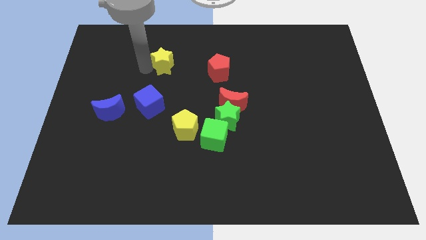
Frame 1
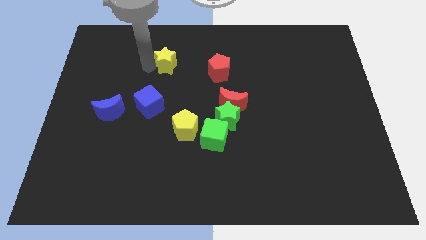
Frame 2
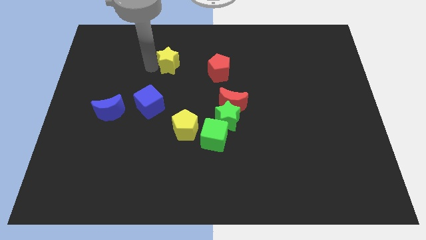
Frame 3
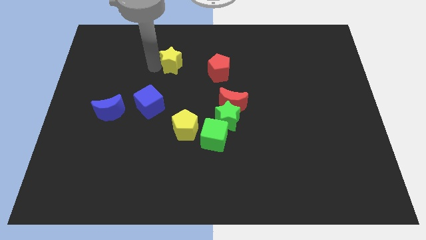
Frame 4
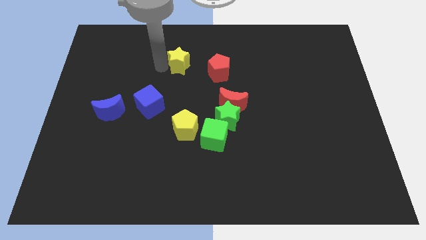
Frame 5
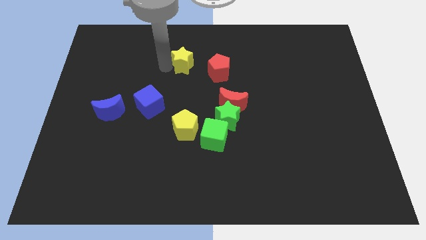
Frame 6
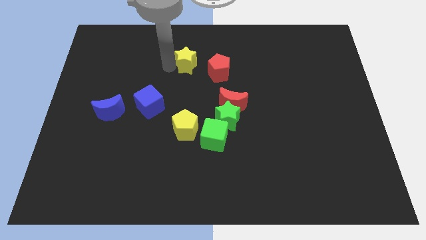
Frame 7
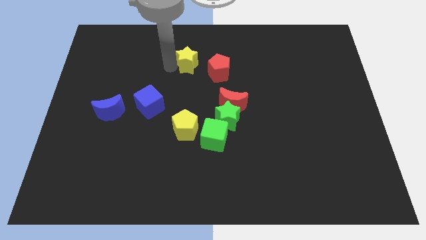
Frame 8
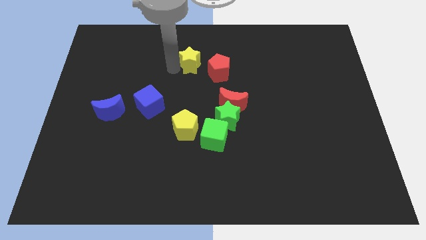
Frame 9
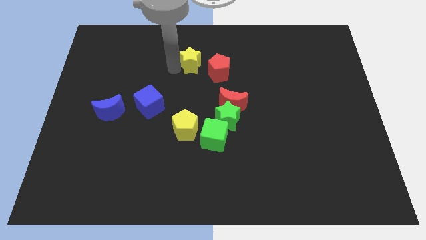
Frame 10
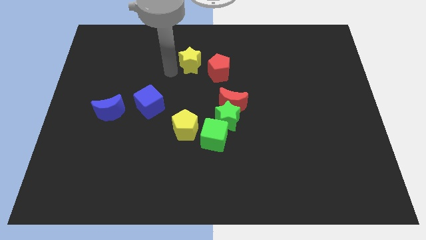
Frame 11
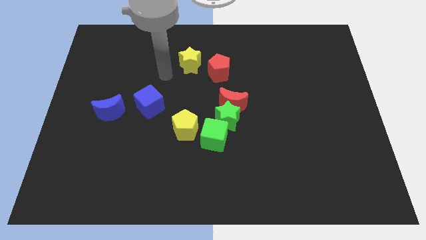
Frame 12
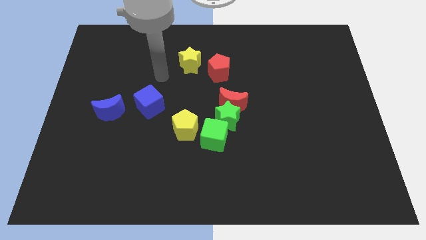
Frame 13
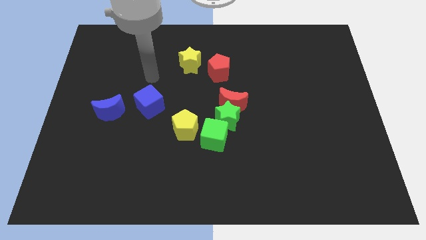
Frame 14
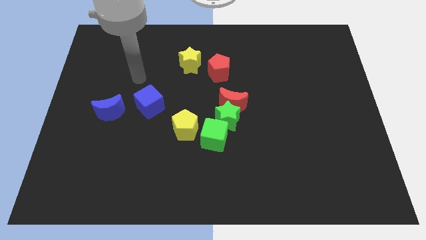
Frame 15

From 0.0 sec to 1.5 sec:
drag yellow star beside red pentagon

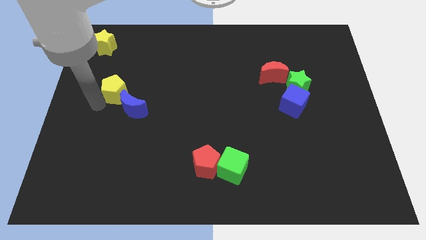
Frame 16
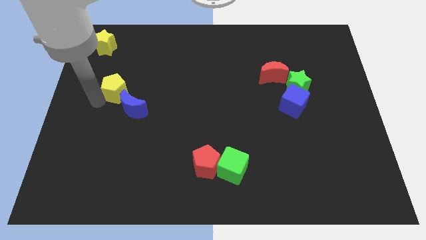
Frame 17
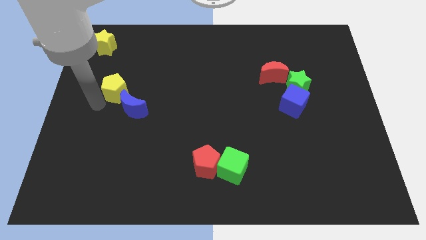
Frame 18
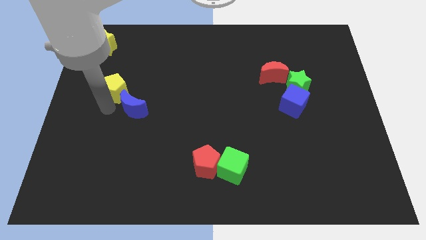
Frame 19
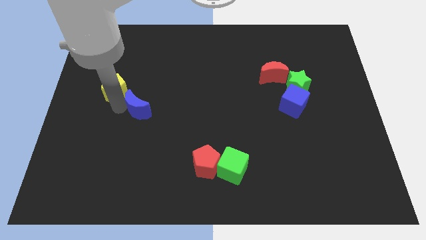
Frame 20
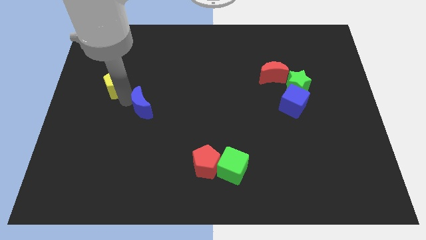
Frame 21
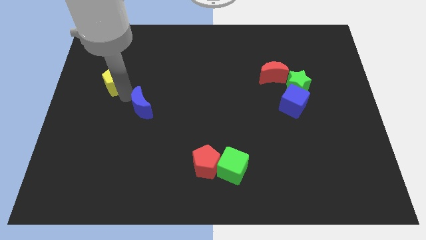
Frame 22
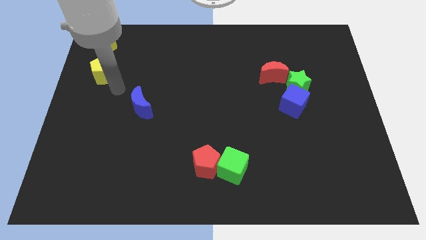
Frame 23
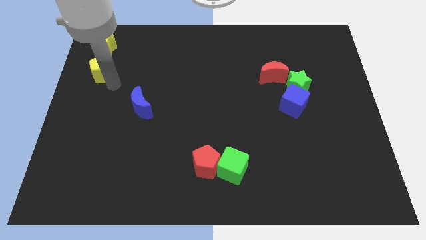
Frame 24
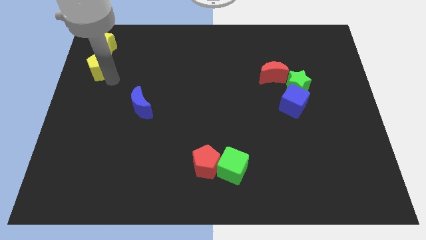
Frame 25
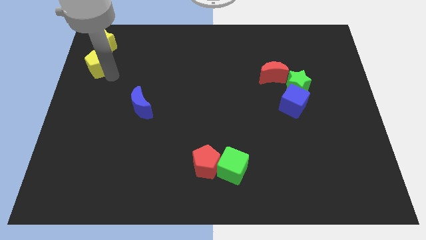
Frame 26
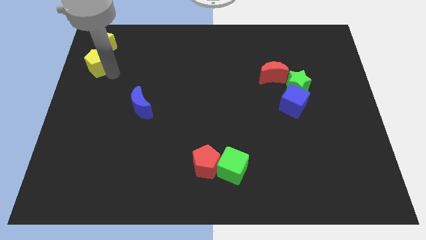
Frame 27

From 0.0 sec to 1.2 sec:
separate the yellow pentagon from blue moon

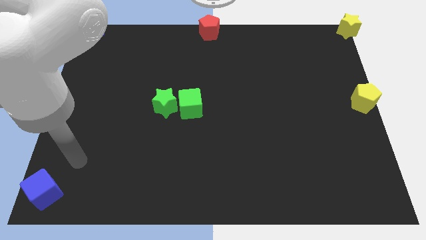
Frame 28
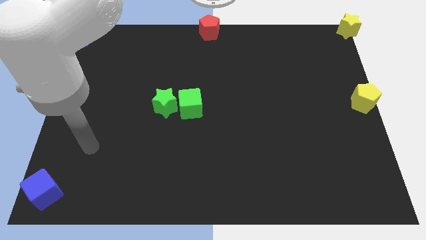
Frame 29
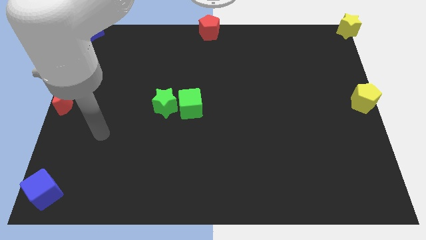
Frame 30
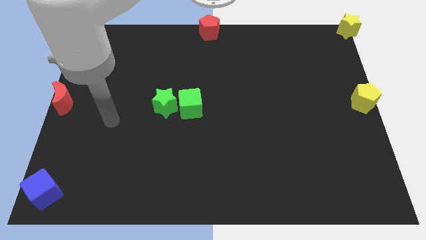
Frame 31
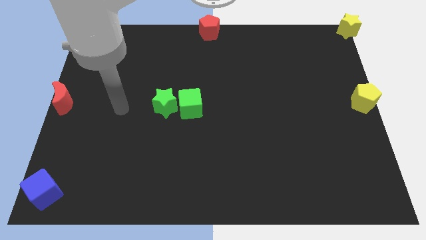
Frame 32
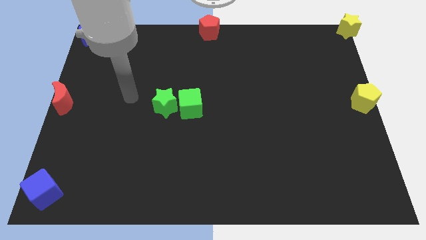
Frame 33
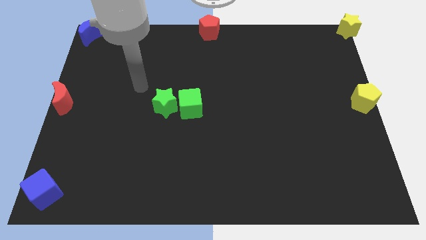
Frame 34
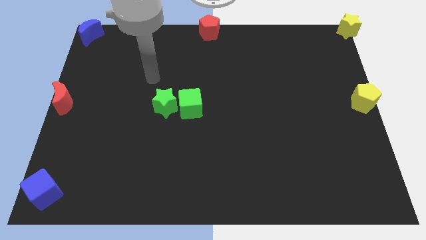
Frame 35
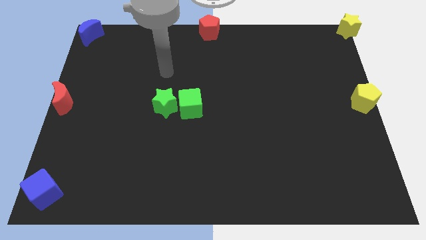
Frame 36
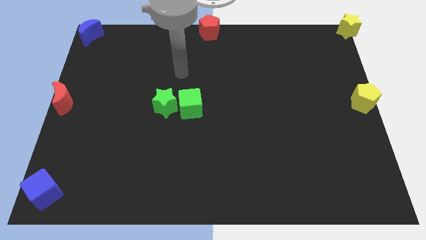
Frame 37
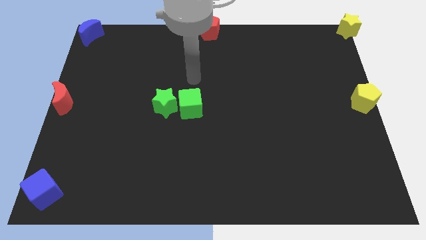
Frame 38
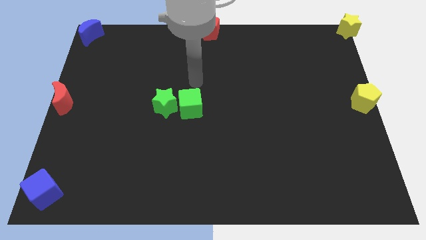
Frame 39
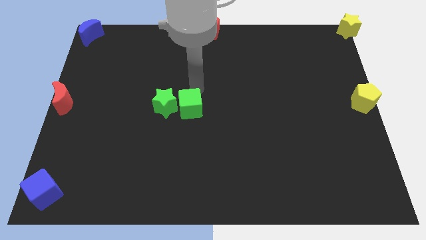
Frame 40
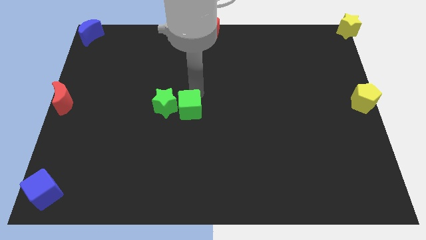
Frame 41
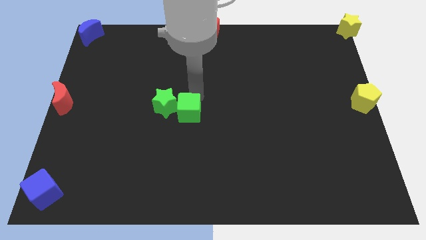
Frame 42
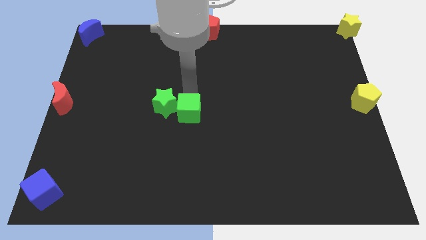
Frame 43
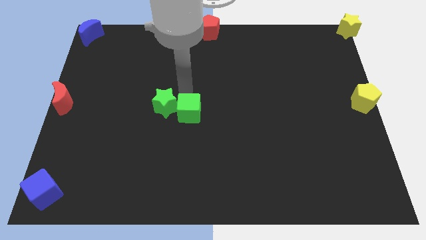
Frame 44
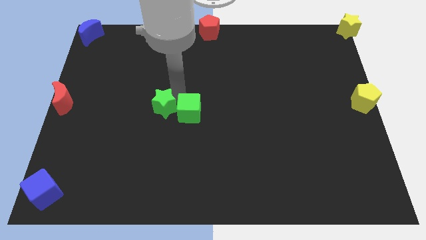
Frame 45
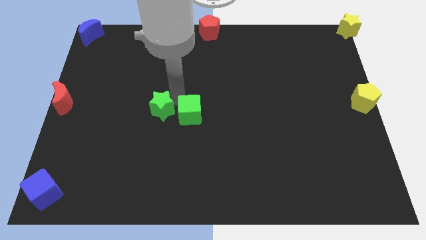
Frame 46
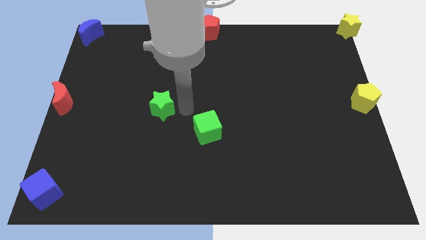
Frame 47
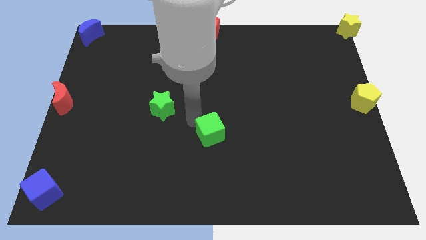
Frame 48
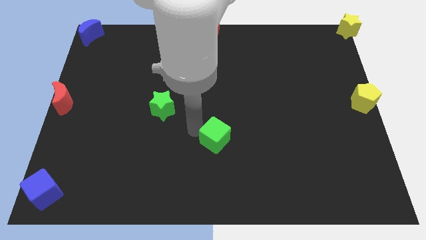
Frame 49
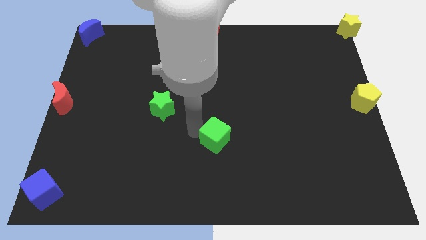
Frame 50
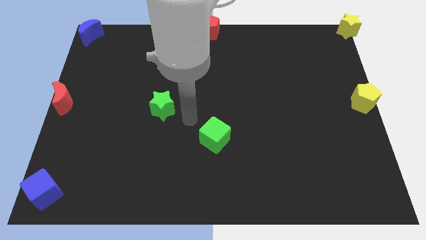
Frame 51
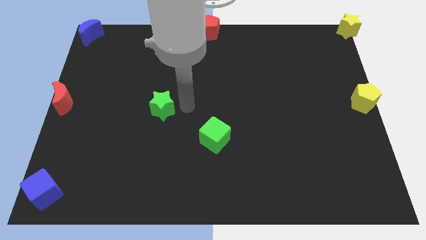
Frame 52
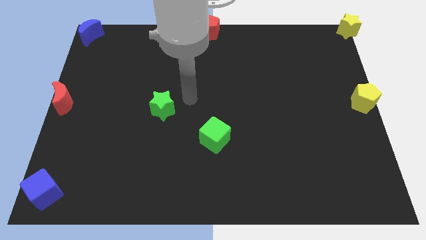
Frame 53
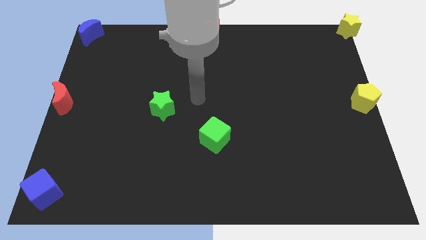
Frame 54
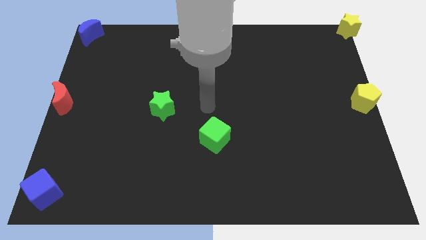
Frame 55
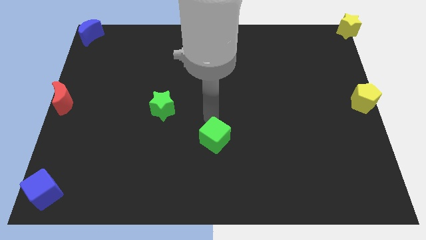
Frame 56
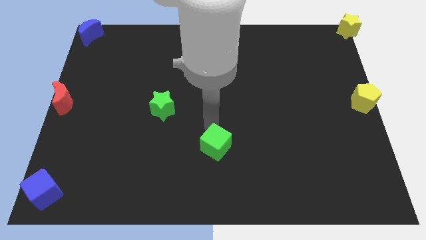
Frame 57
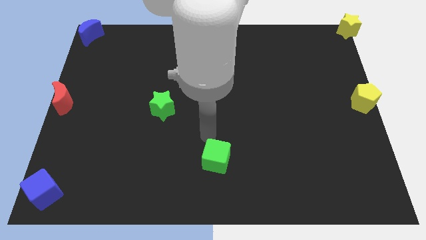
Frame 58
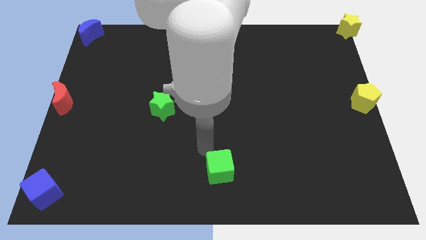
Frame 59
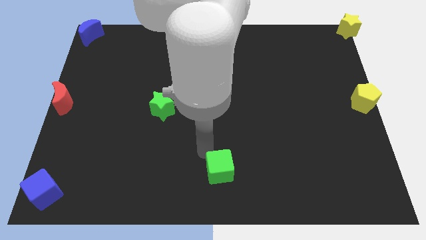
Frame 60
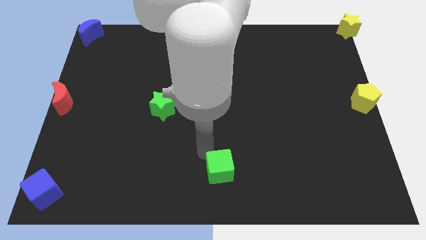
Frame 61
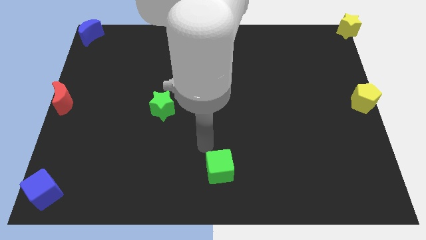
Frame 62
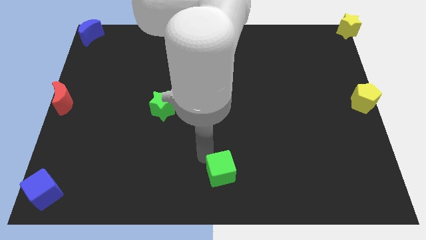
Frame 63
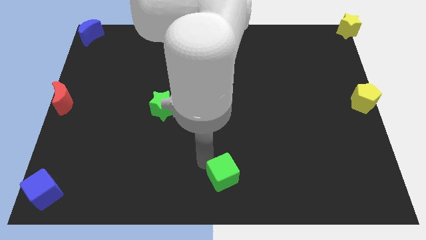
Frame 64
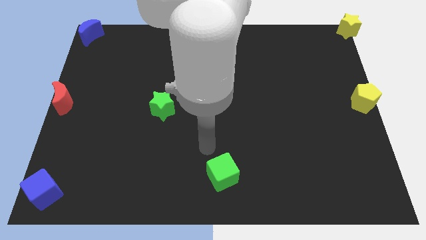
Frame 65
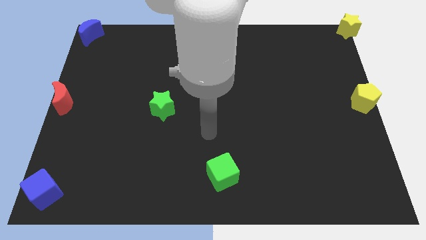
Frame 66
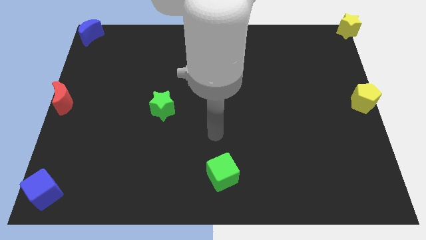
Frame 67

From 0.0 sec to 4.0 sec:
separate the green cube with green star towards the bottom

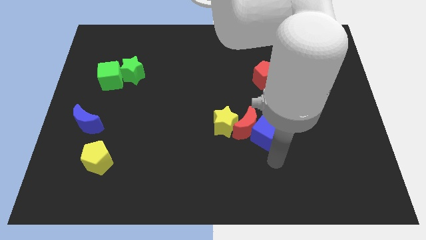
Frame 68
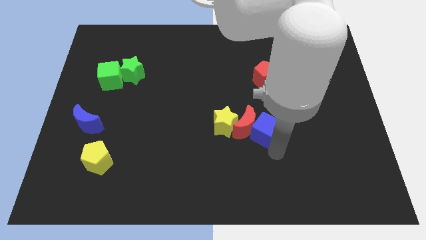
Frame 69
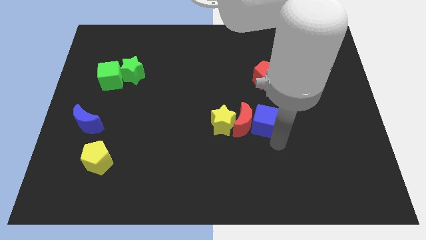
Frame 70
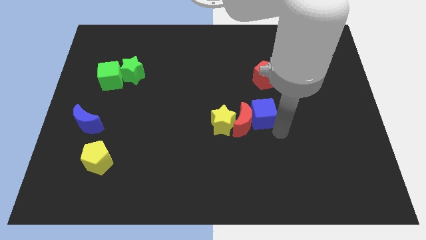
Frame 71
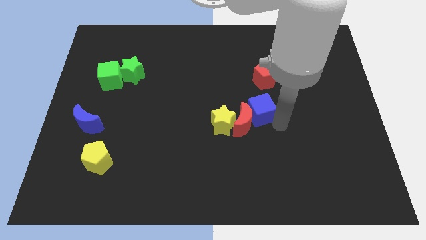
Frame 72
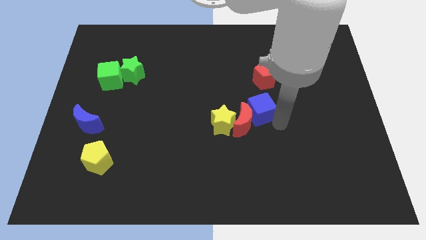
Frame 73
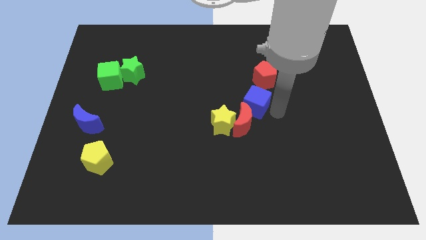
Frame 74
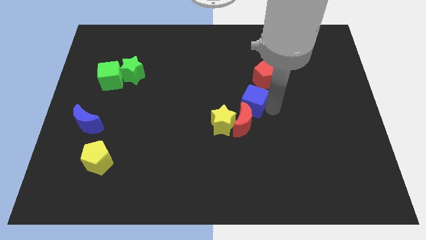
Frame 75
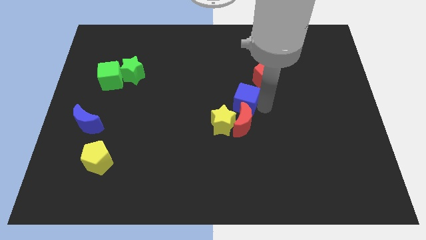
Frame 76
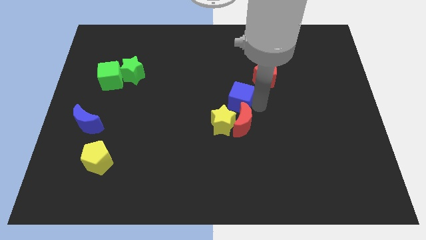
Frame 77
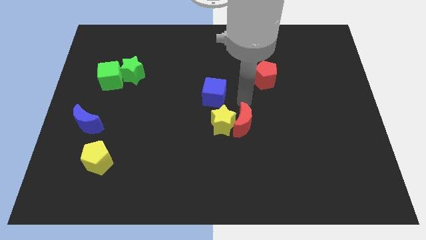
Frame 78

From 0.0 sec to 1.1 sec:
place the blue cube above the yellow star

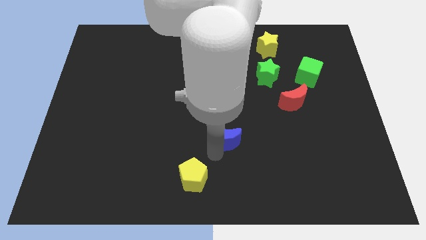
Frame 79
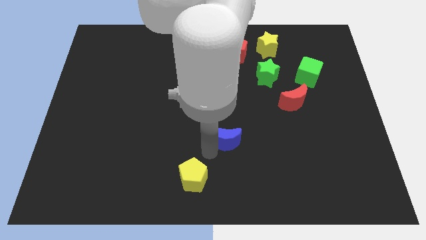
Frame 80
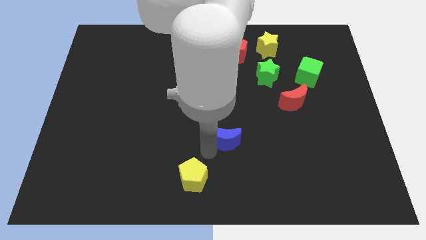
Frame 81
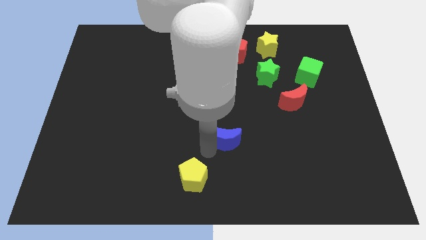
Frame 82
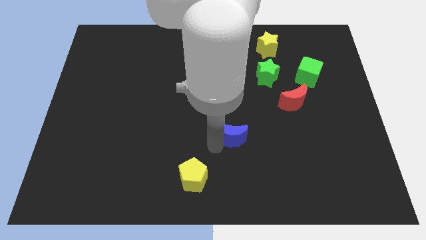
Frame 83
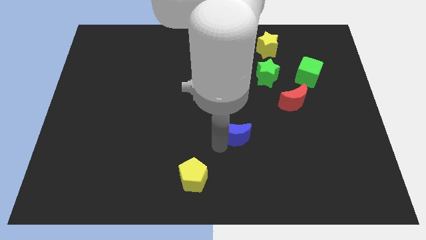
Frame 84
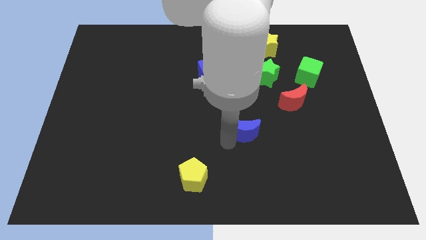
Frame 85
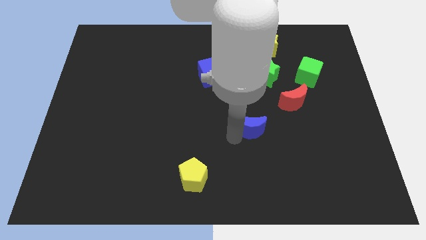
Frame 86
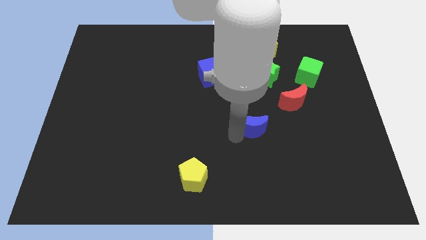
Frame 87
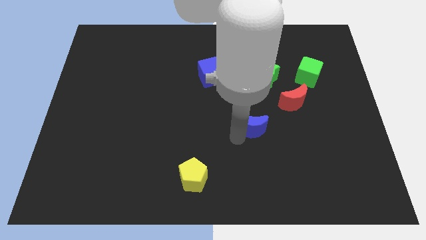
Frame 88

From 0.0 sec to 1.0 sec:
push the blue crescent towards the red crescent
